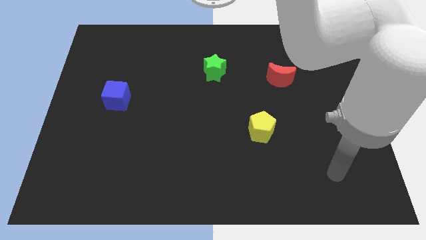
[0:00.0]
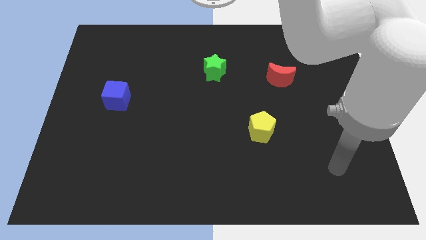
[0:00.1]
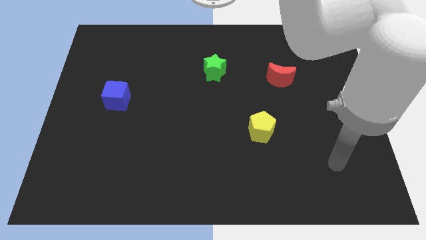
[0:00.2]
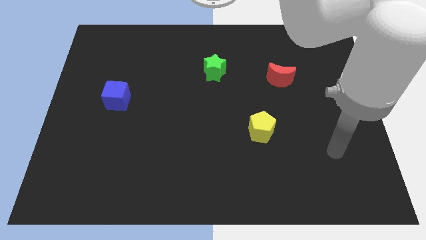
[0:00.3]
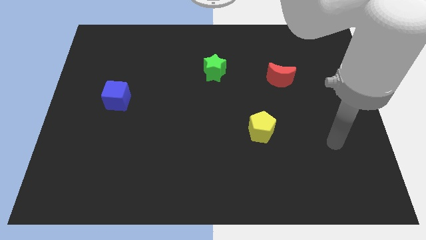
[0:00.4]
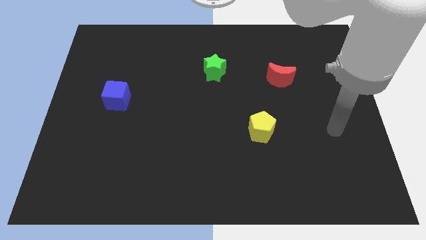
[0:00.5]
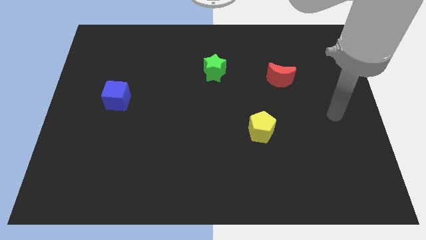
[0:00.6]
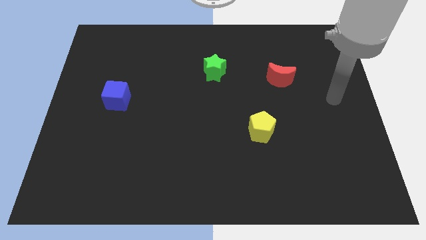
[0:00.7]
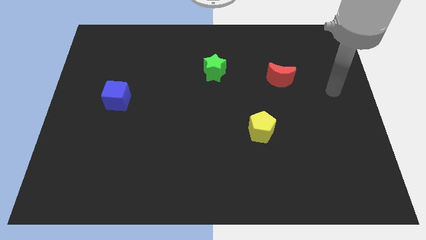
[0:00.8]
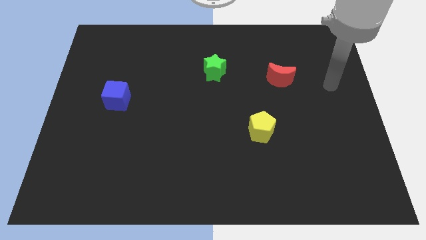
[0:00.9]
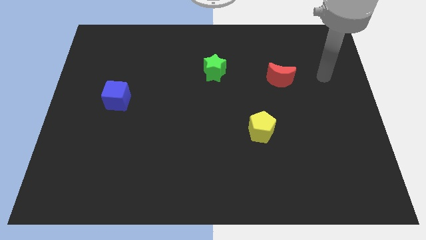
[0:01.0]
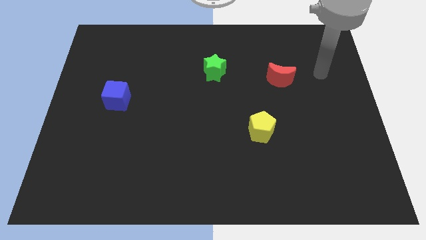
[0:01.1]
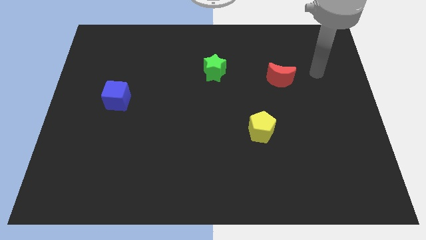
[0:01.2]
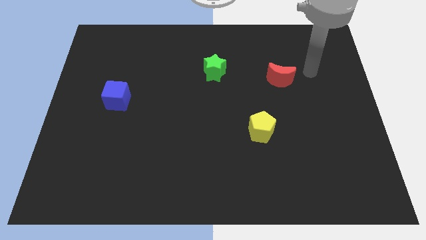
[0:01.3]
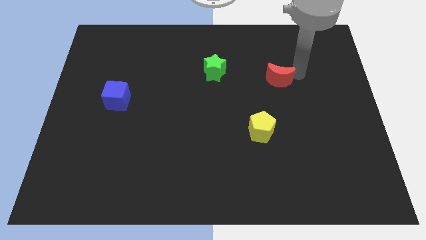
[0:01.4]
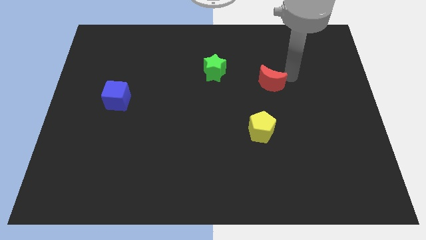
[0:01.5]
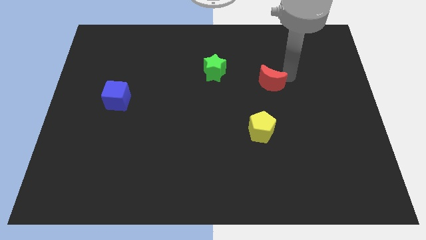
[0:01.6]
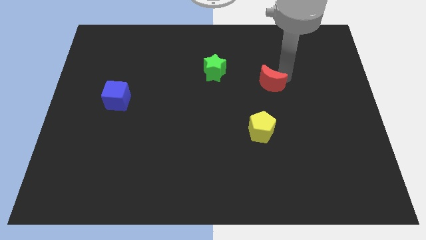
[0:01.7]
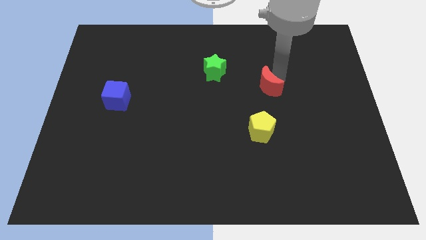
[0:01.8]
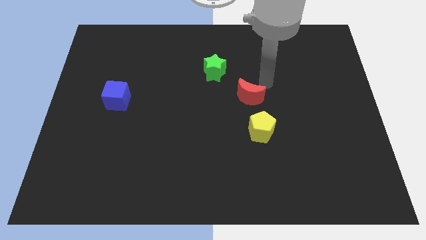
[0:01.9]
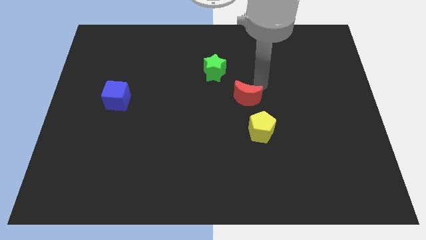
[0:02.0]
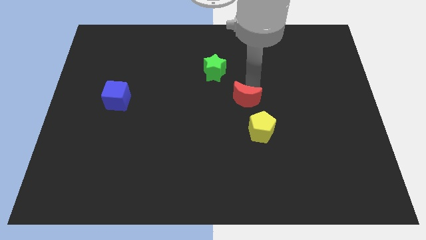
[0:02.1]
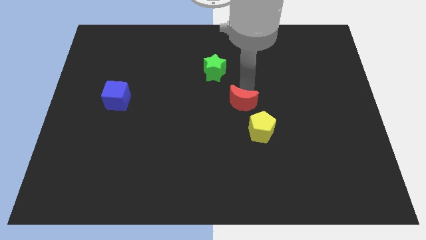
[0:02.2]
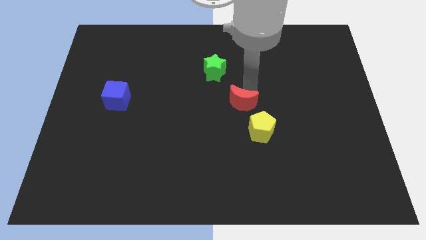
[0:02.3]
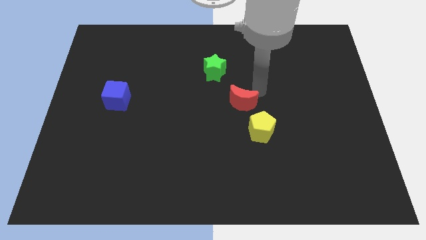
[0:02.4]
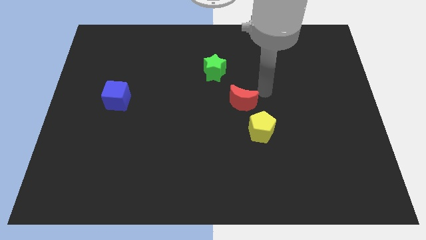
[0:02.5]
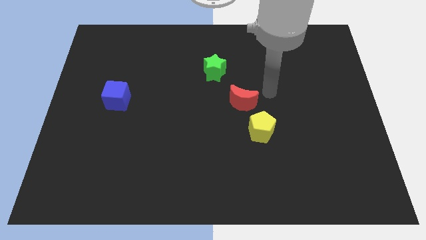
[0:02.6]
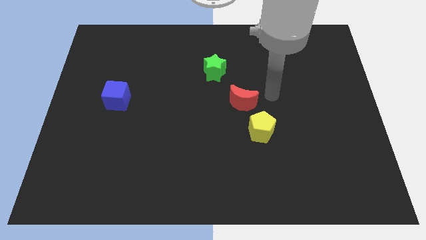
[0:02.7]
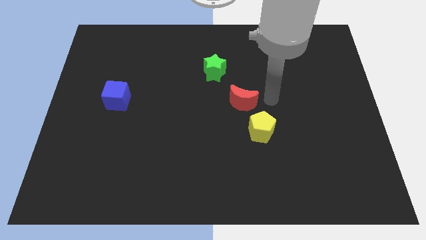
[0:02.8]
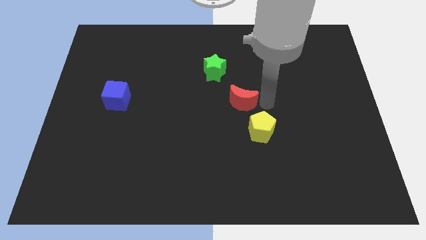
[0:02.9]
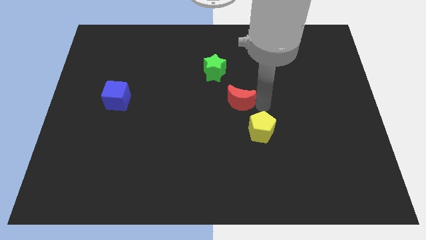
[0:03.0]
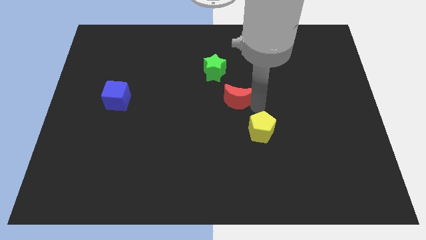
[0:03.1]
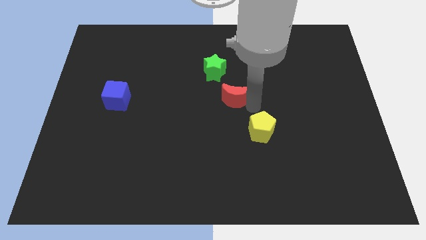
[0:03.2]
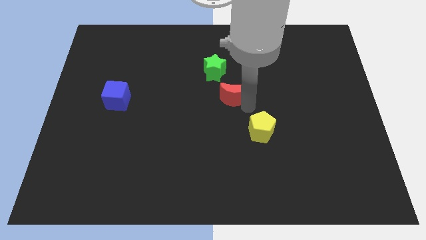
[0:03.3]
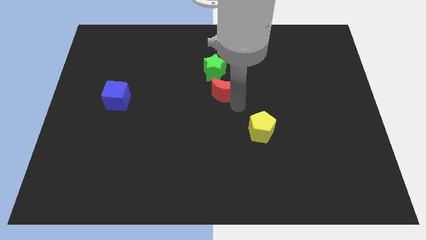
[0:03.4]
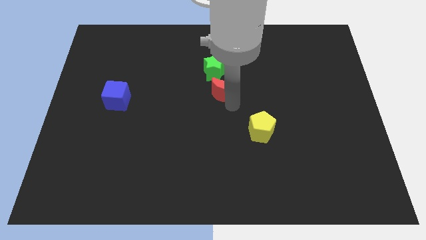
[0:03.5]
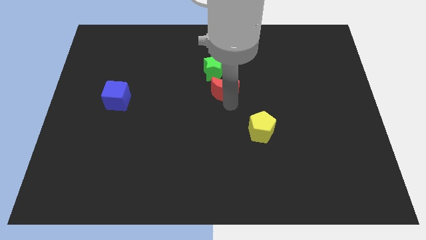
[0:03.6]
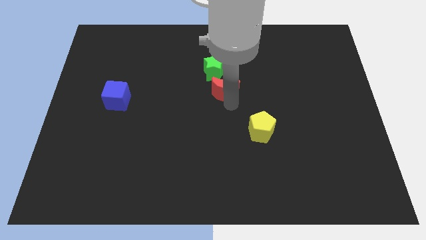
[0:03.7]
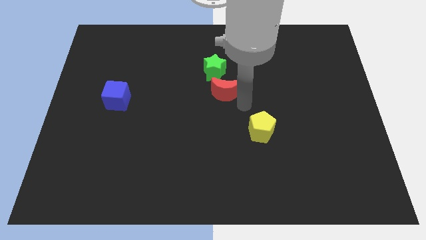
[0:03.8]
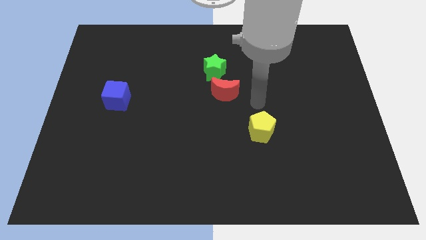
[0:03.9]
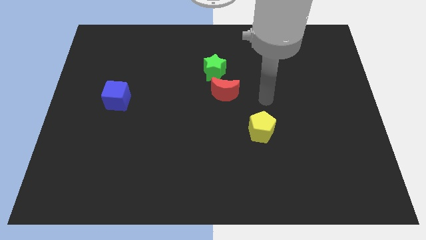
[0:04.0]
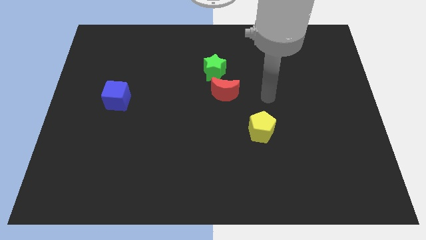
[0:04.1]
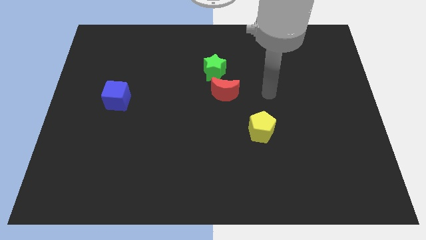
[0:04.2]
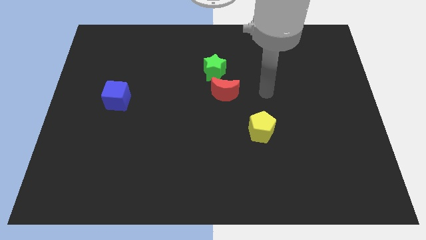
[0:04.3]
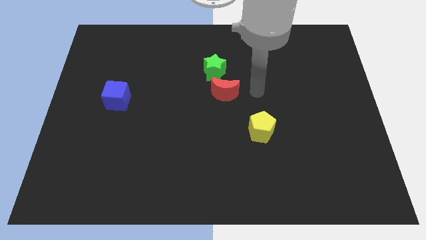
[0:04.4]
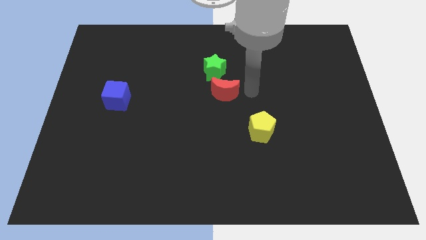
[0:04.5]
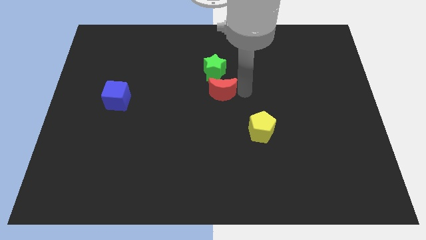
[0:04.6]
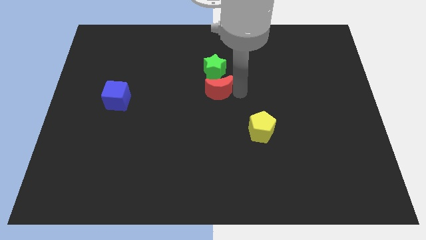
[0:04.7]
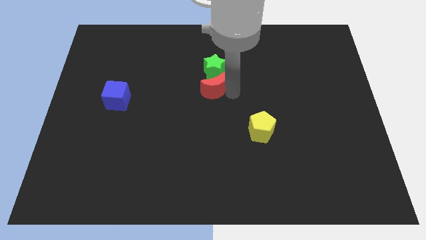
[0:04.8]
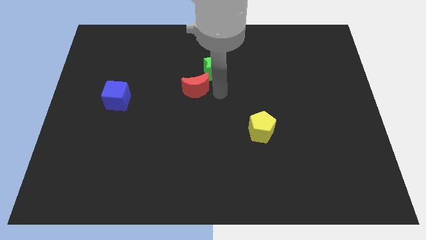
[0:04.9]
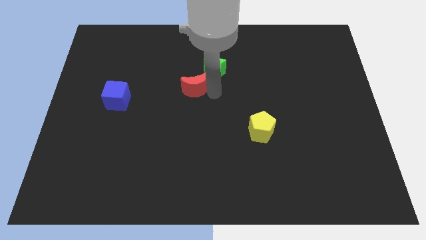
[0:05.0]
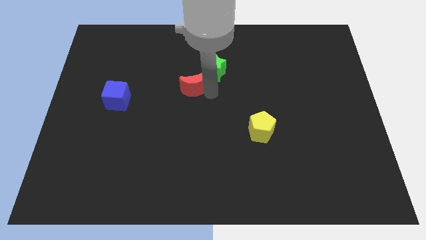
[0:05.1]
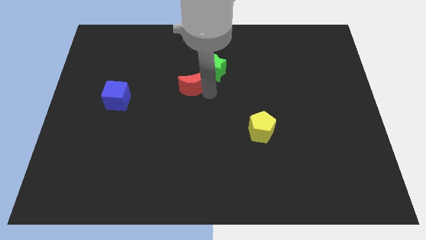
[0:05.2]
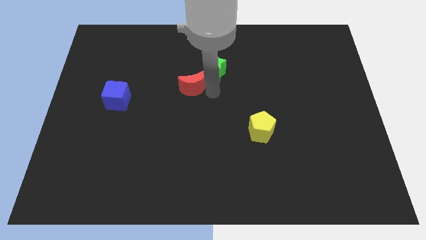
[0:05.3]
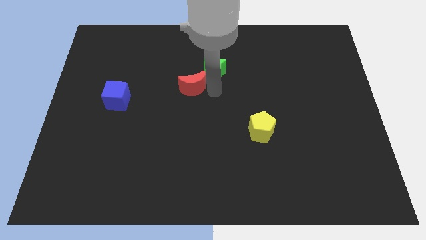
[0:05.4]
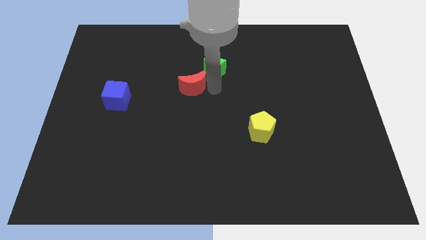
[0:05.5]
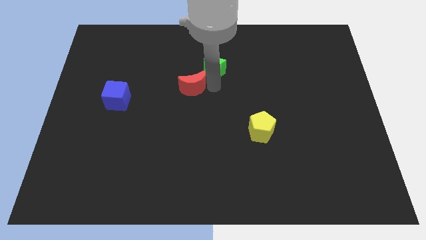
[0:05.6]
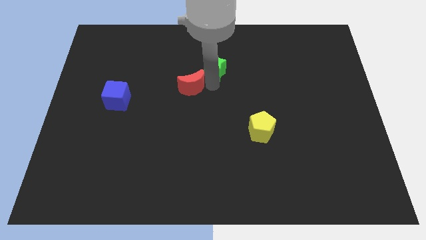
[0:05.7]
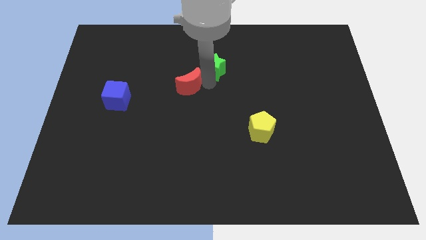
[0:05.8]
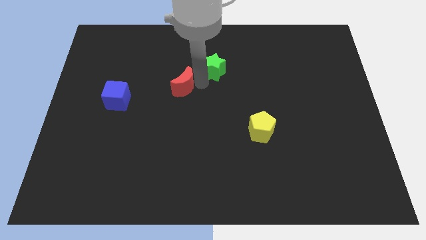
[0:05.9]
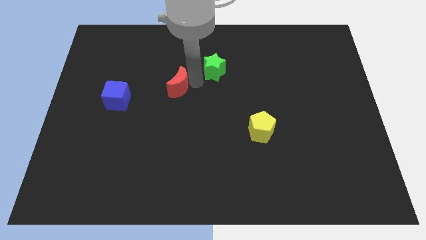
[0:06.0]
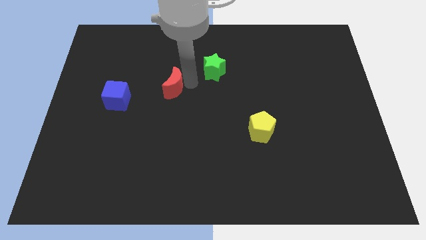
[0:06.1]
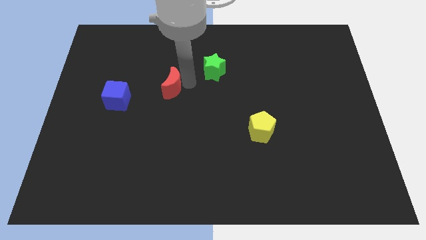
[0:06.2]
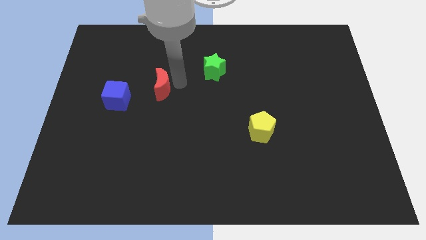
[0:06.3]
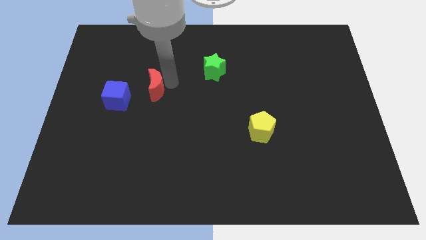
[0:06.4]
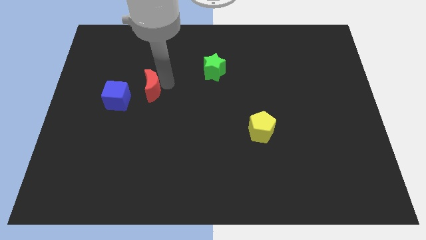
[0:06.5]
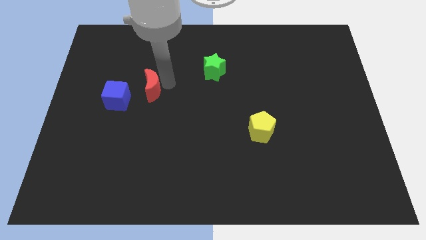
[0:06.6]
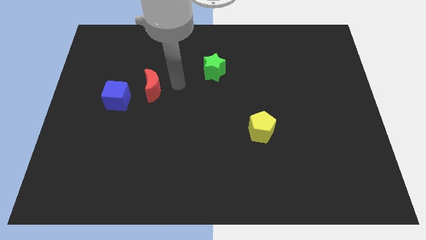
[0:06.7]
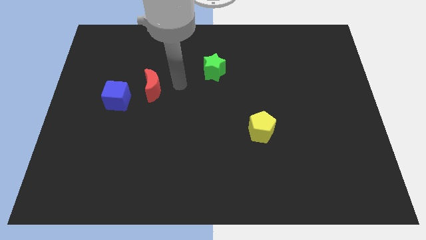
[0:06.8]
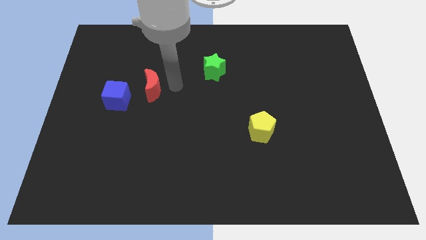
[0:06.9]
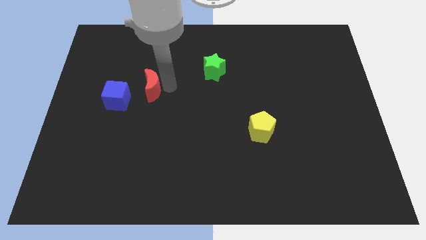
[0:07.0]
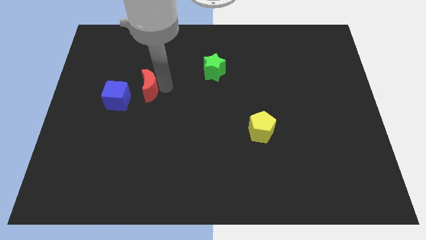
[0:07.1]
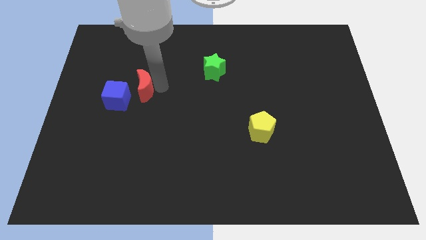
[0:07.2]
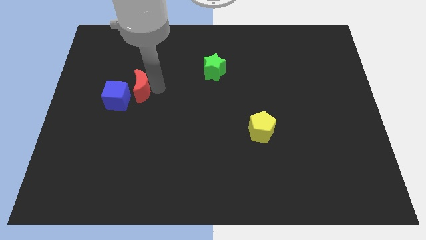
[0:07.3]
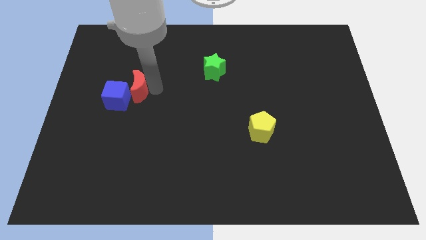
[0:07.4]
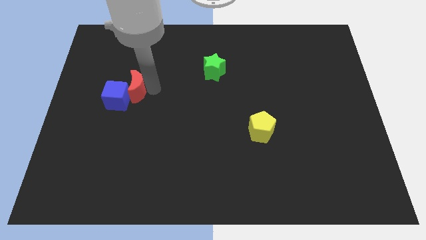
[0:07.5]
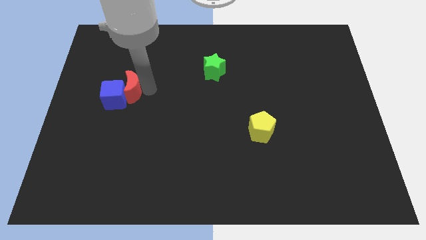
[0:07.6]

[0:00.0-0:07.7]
put the moon close to the blue cube

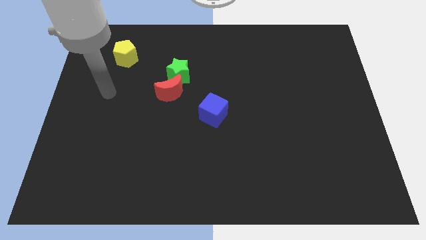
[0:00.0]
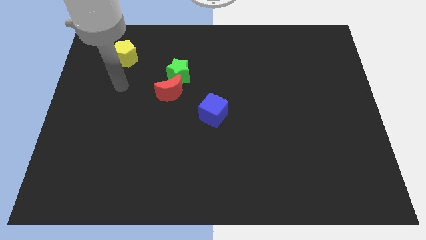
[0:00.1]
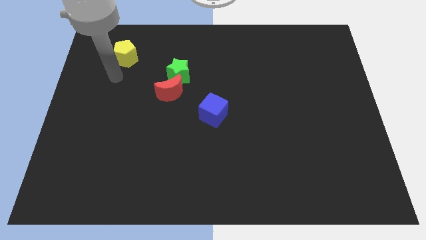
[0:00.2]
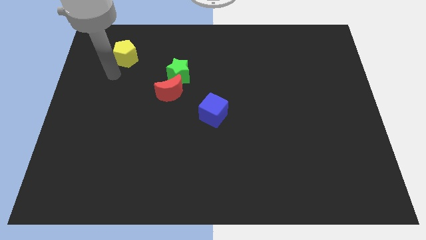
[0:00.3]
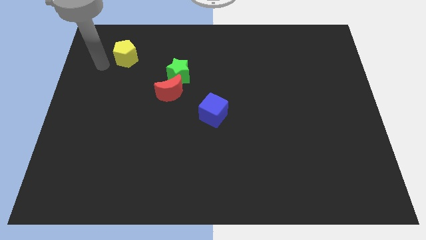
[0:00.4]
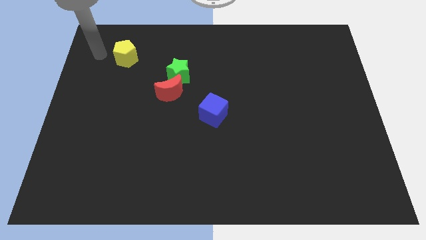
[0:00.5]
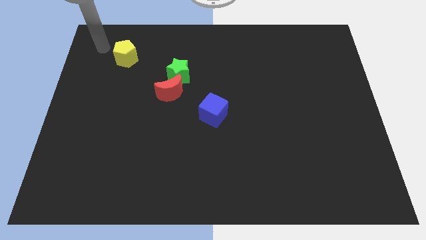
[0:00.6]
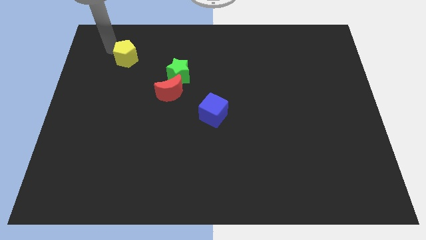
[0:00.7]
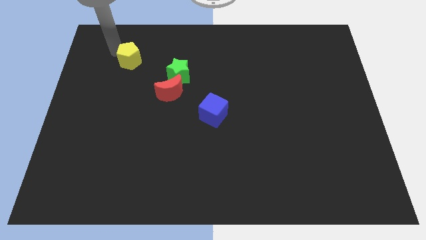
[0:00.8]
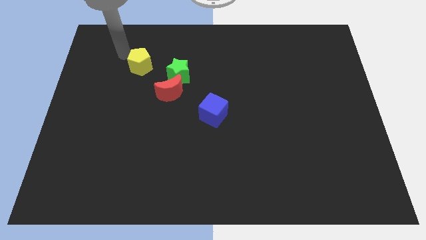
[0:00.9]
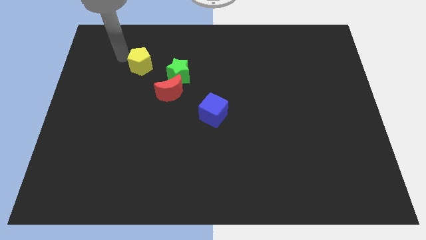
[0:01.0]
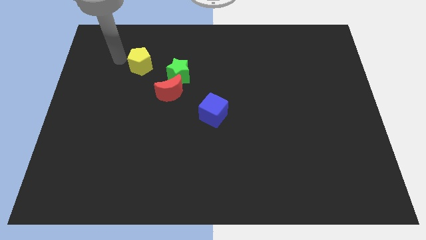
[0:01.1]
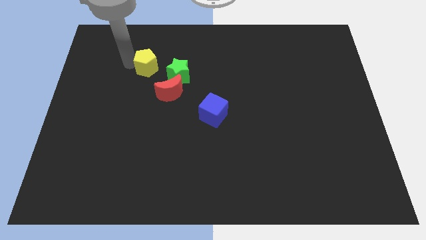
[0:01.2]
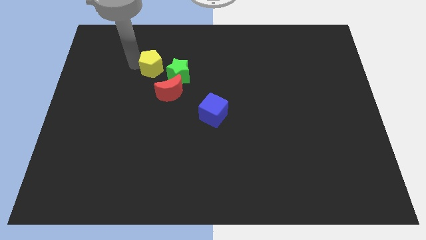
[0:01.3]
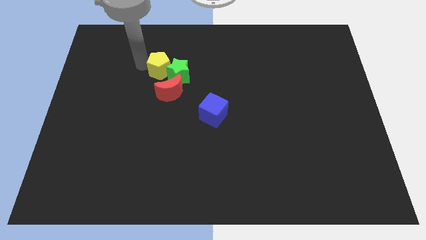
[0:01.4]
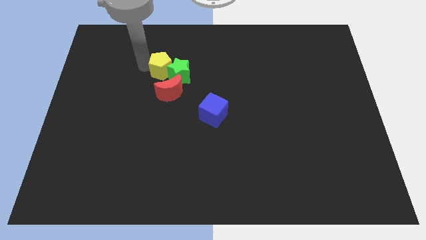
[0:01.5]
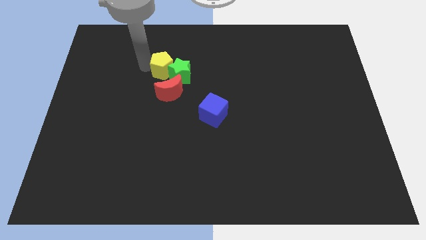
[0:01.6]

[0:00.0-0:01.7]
move the pentagon next to the green block
